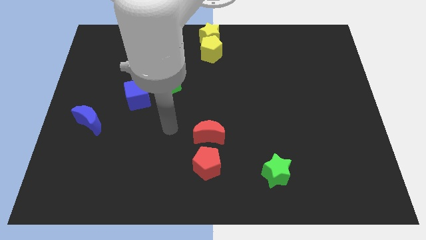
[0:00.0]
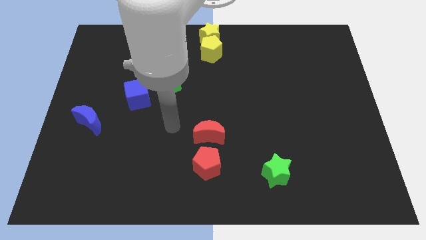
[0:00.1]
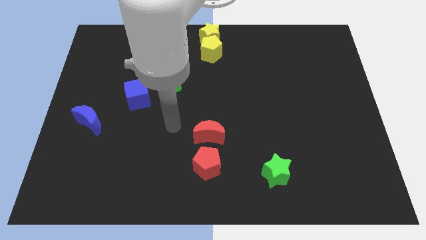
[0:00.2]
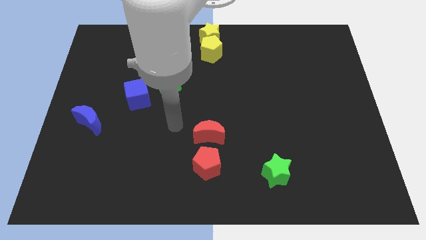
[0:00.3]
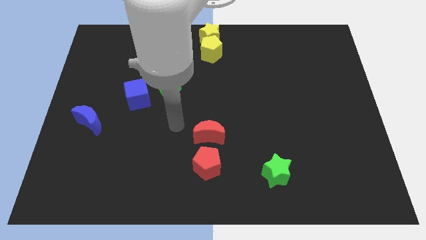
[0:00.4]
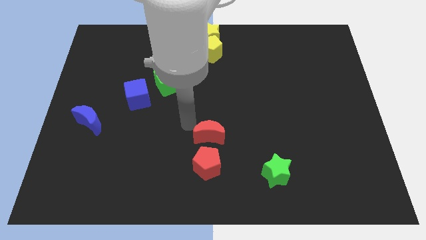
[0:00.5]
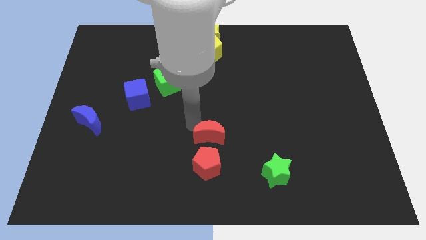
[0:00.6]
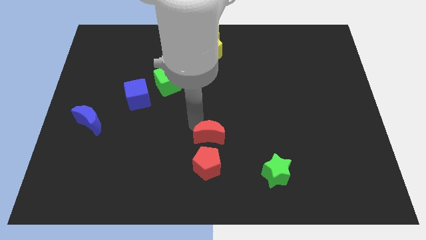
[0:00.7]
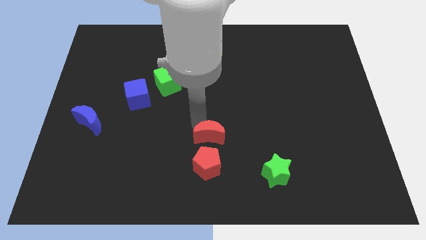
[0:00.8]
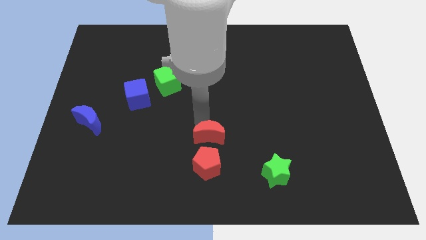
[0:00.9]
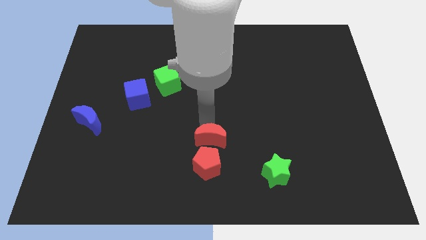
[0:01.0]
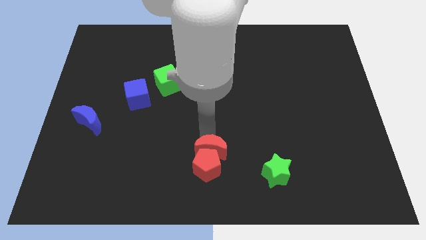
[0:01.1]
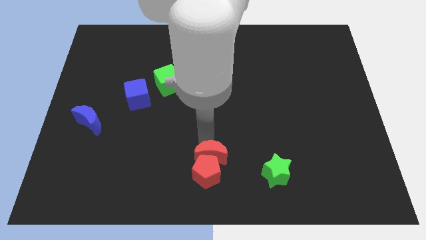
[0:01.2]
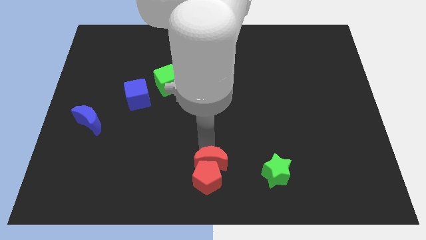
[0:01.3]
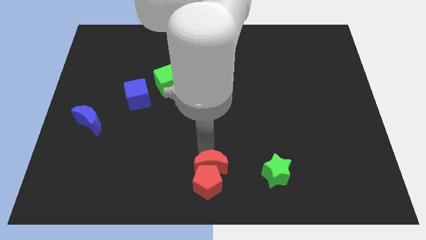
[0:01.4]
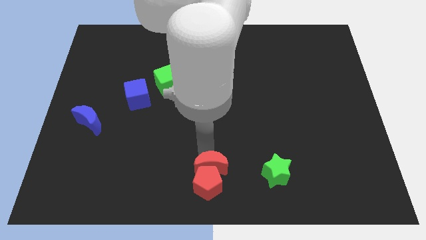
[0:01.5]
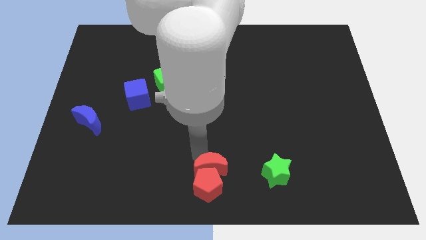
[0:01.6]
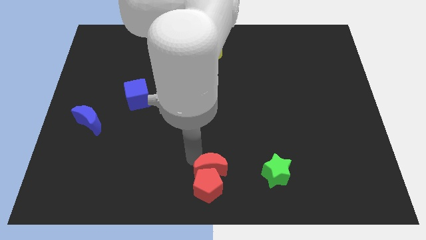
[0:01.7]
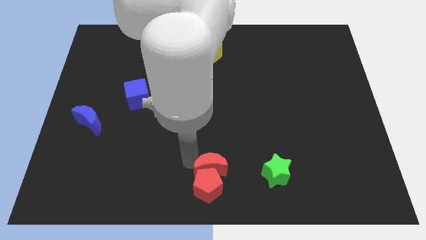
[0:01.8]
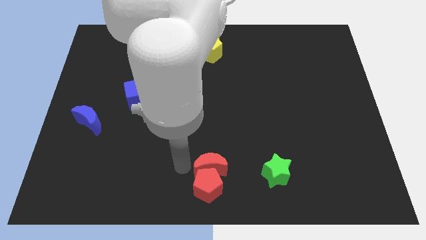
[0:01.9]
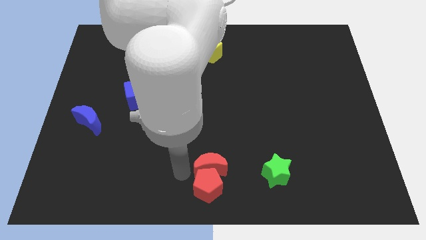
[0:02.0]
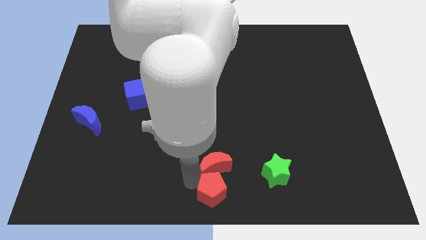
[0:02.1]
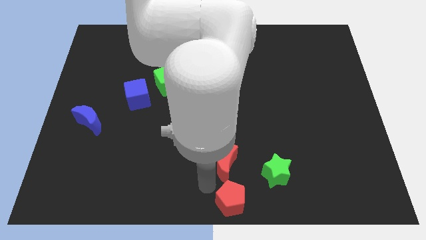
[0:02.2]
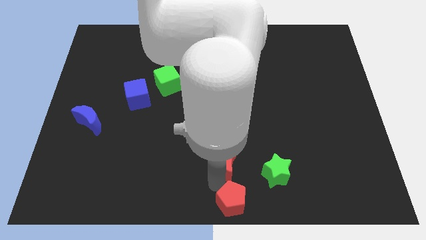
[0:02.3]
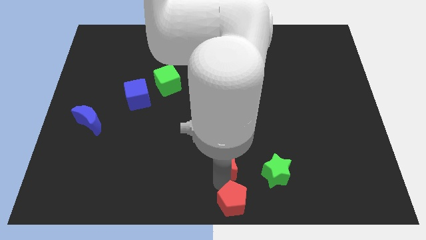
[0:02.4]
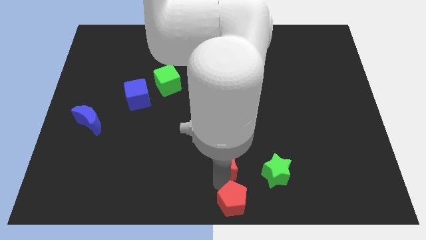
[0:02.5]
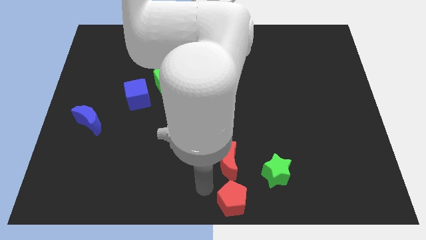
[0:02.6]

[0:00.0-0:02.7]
move the red crescent and red pentagon to the bottom center of the board

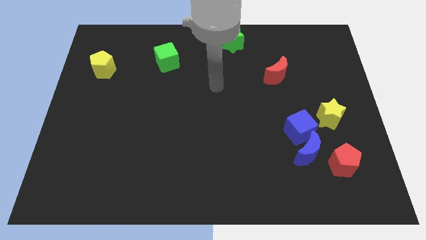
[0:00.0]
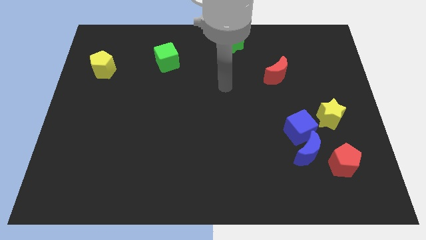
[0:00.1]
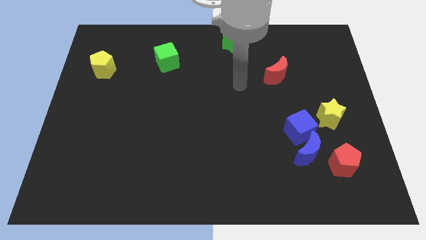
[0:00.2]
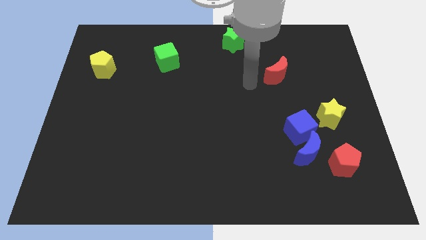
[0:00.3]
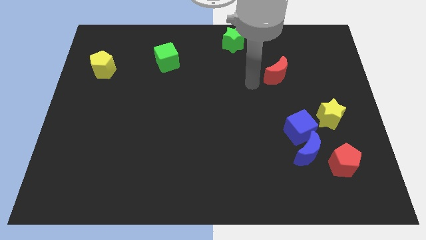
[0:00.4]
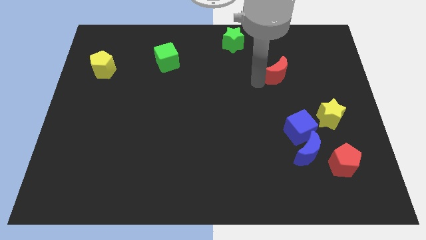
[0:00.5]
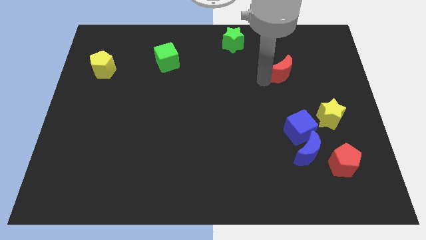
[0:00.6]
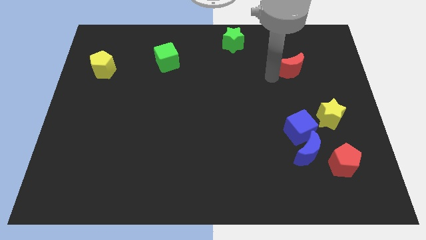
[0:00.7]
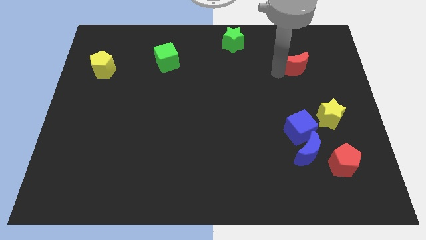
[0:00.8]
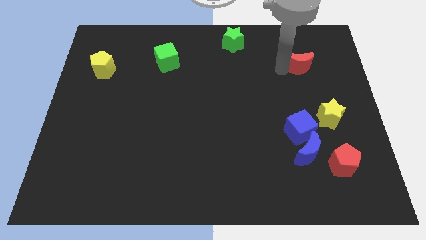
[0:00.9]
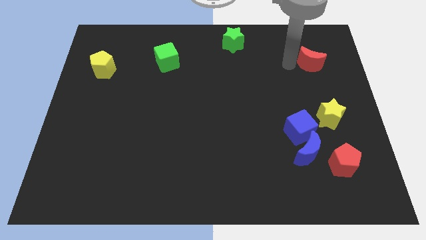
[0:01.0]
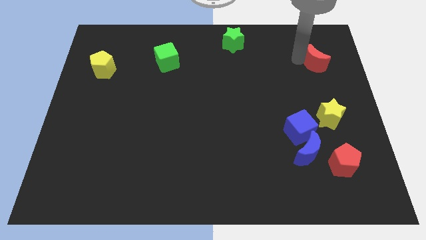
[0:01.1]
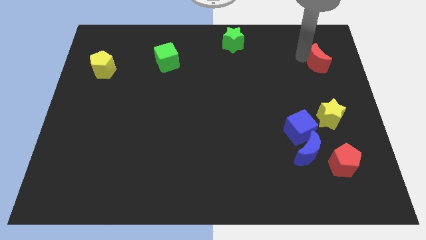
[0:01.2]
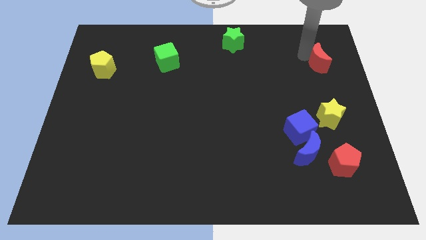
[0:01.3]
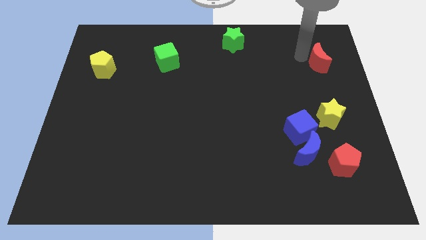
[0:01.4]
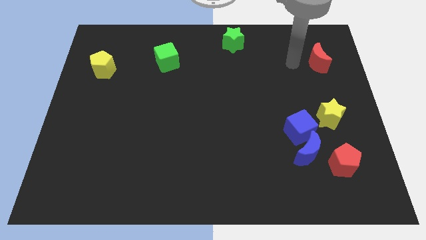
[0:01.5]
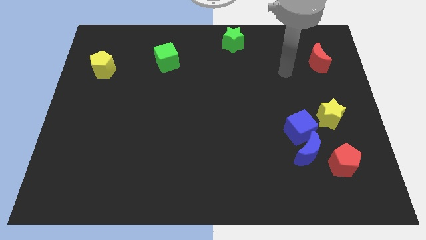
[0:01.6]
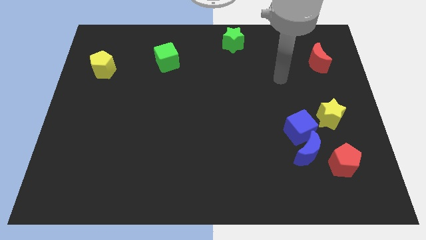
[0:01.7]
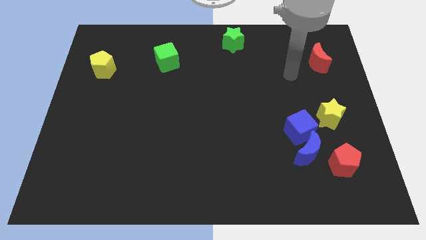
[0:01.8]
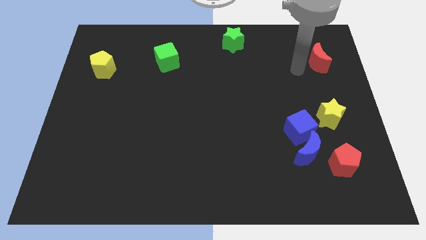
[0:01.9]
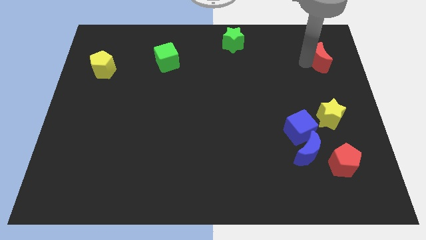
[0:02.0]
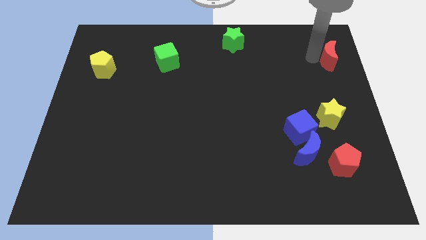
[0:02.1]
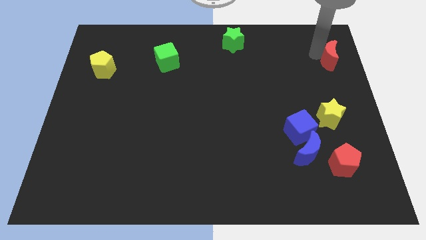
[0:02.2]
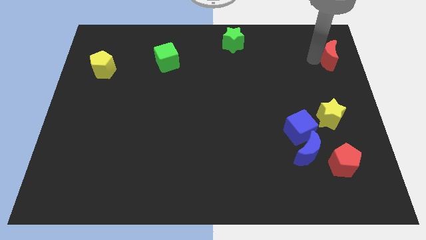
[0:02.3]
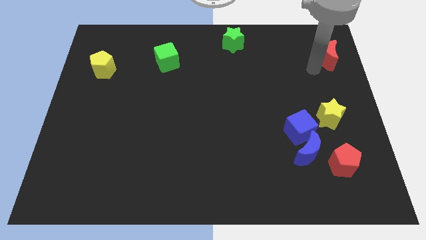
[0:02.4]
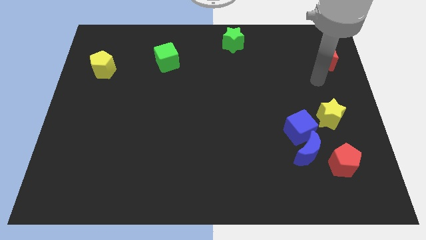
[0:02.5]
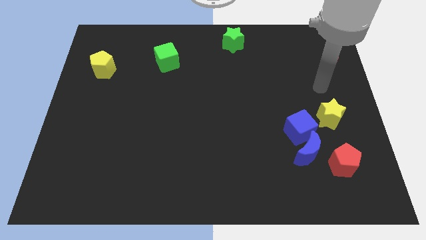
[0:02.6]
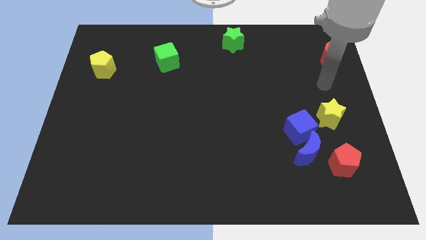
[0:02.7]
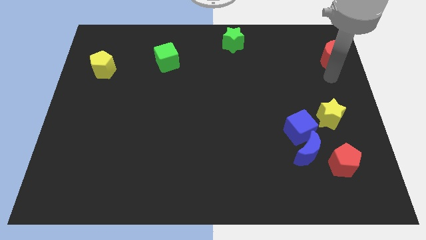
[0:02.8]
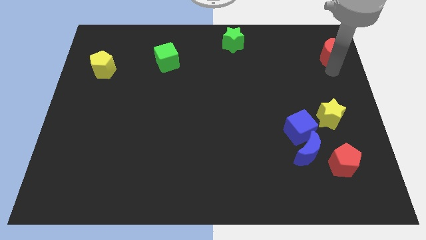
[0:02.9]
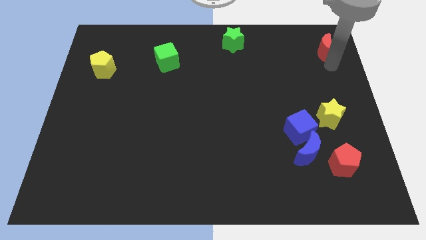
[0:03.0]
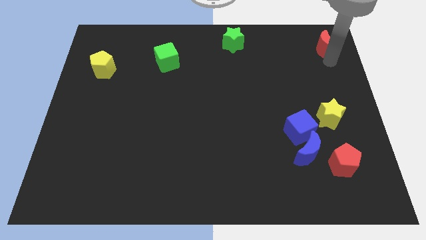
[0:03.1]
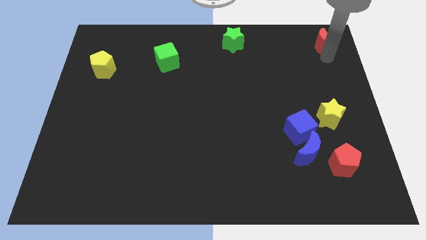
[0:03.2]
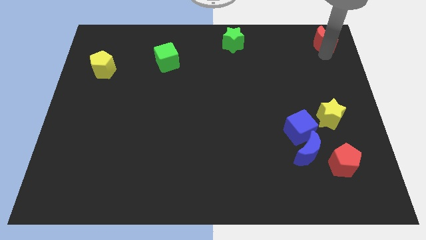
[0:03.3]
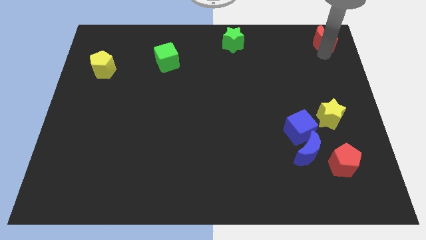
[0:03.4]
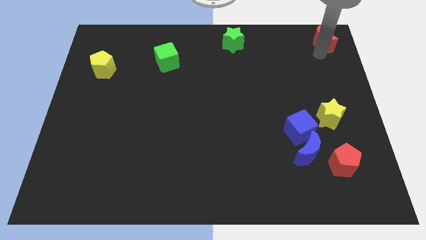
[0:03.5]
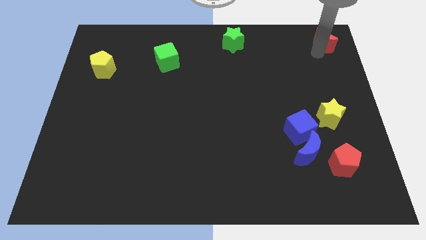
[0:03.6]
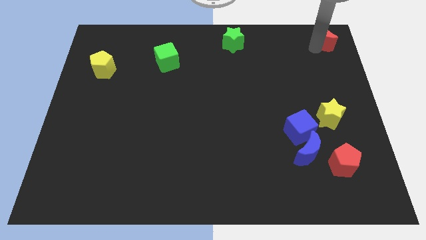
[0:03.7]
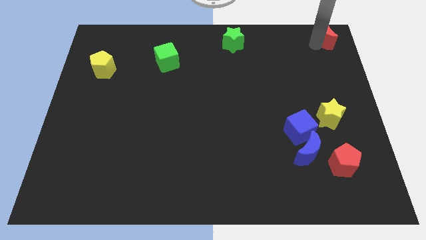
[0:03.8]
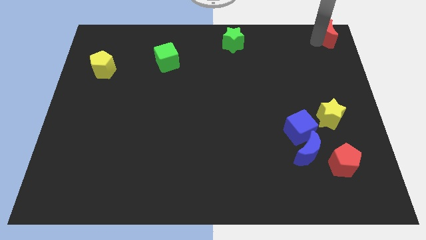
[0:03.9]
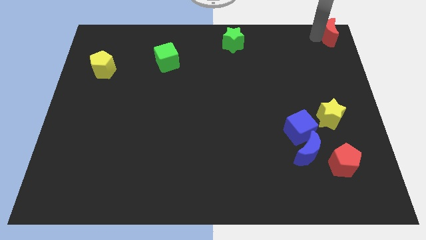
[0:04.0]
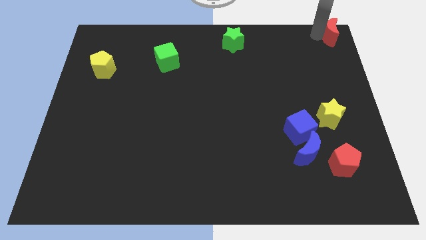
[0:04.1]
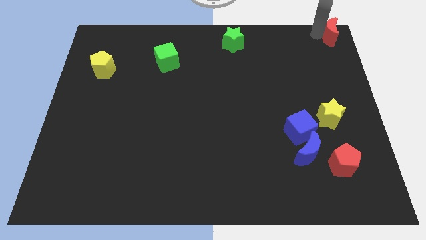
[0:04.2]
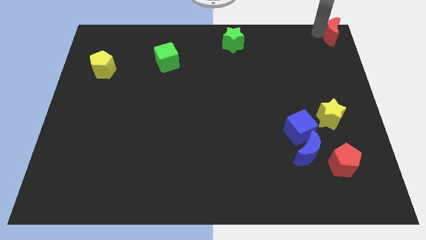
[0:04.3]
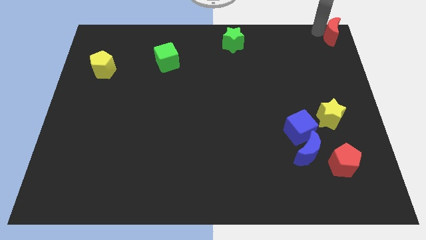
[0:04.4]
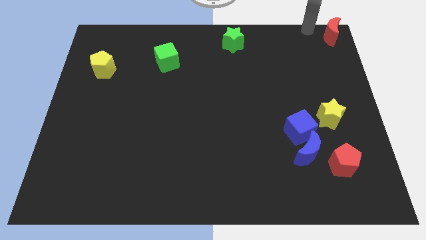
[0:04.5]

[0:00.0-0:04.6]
push the red crescent towards the top right corner of the board

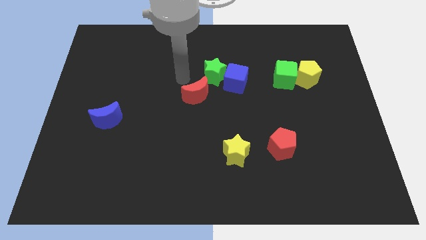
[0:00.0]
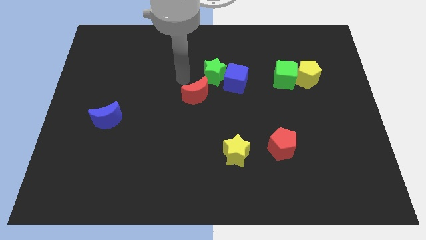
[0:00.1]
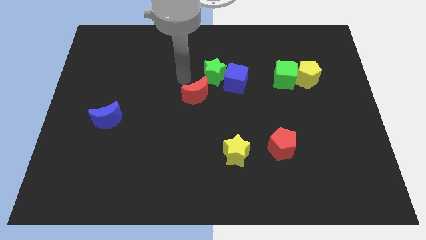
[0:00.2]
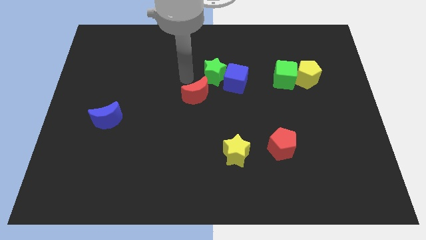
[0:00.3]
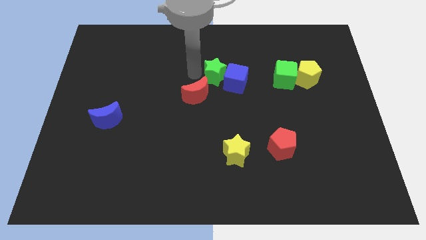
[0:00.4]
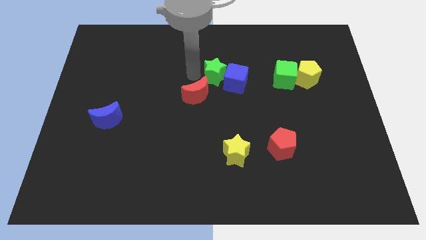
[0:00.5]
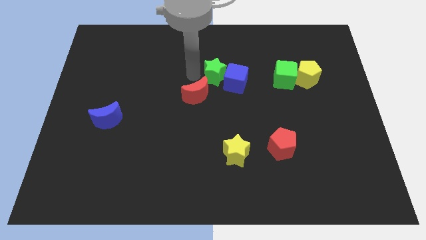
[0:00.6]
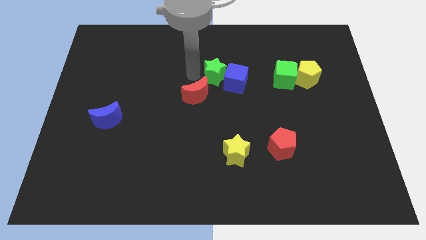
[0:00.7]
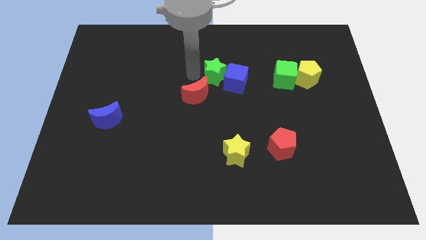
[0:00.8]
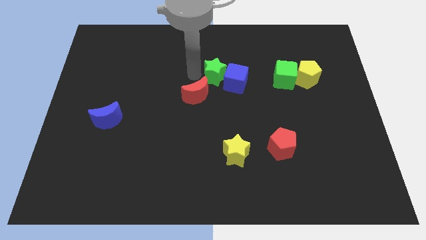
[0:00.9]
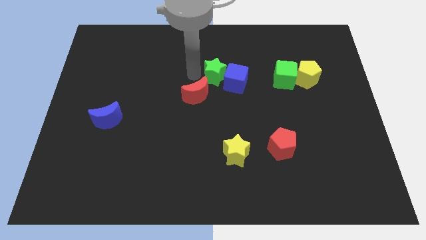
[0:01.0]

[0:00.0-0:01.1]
place arm near green star

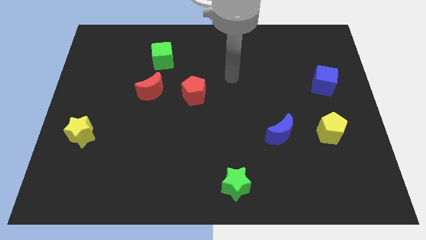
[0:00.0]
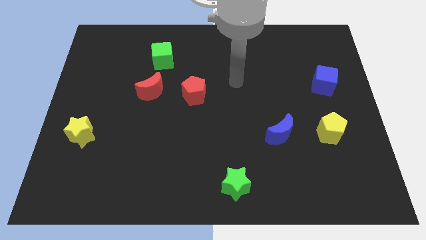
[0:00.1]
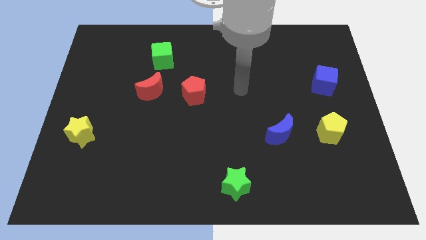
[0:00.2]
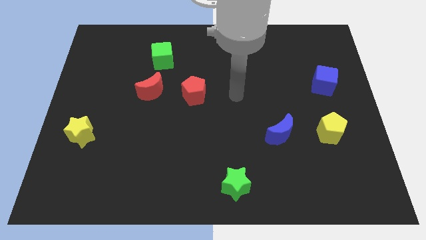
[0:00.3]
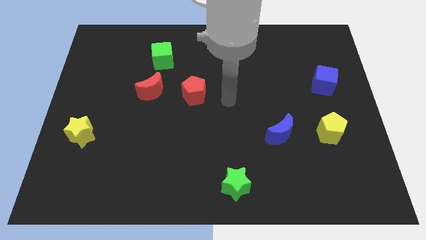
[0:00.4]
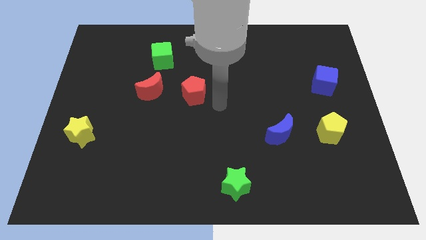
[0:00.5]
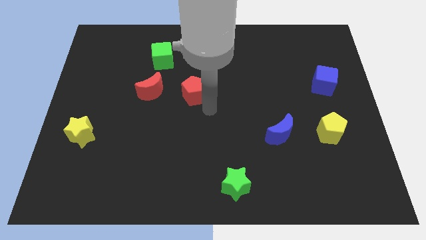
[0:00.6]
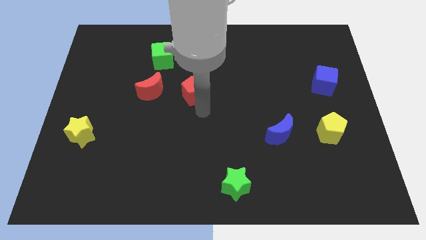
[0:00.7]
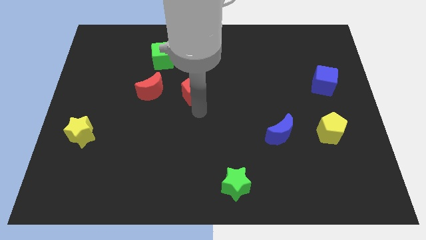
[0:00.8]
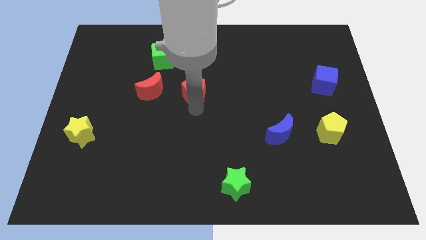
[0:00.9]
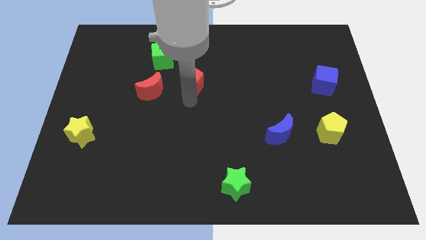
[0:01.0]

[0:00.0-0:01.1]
tap at the bottom of the red pentagon
